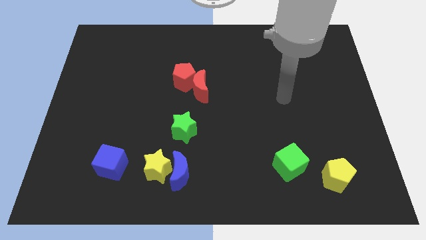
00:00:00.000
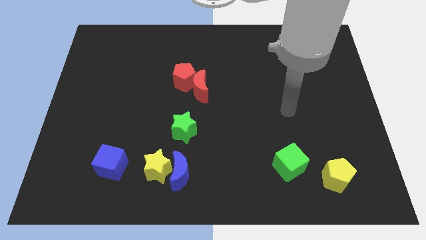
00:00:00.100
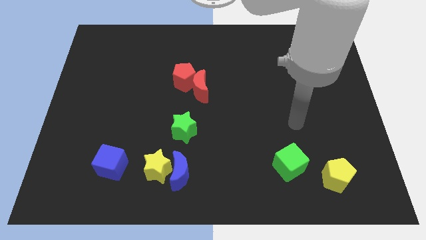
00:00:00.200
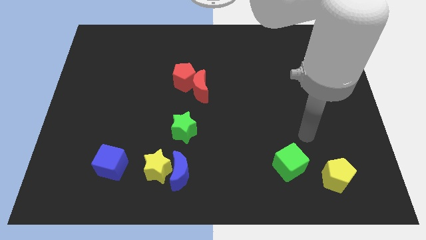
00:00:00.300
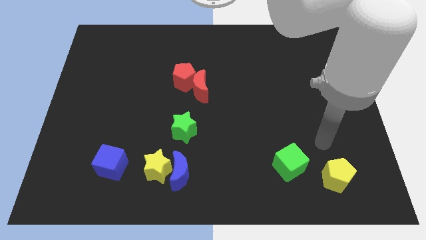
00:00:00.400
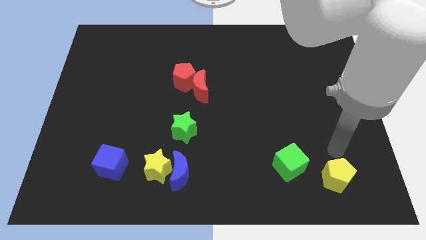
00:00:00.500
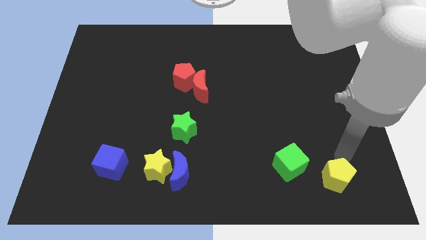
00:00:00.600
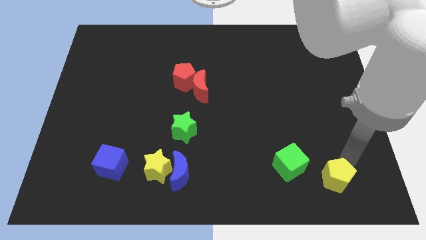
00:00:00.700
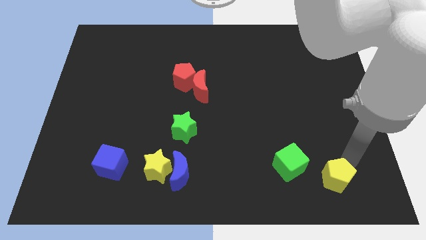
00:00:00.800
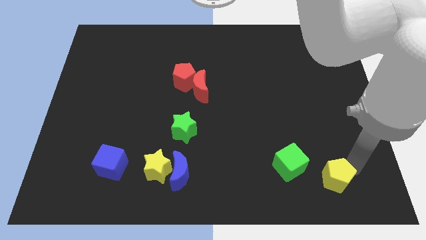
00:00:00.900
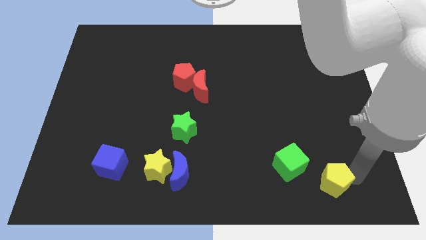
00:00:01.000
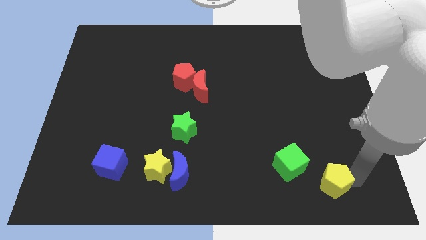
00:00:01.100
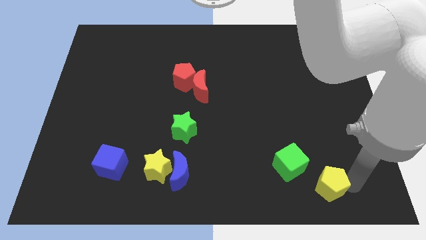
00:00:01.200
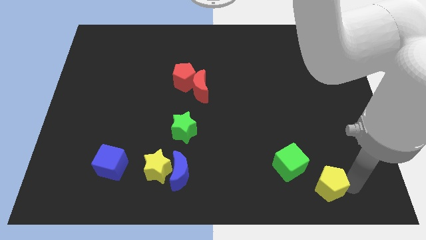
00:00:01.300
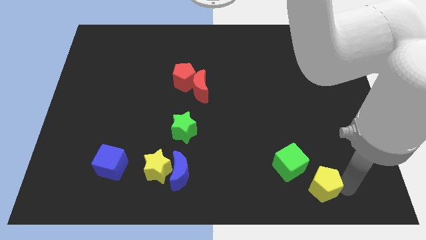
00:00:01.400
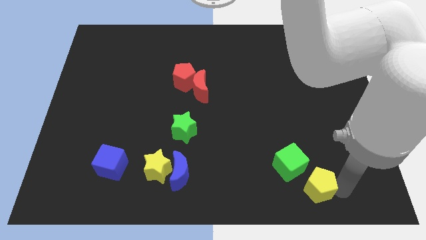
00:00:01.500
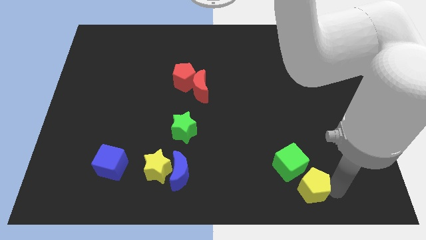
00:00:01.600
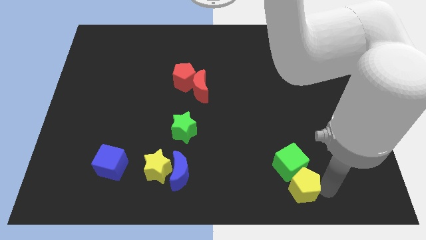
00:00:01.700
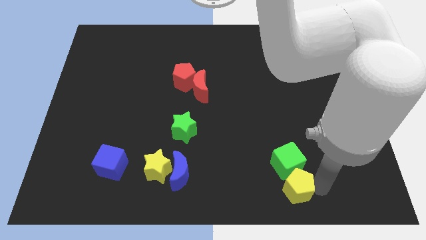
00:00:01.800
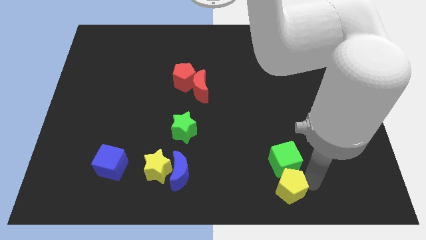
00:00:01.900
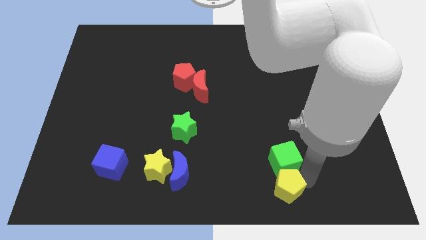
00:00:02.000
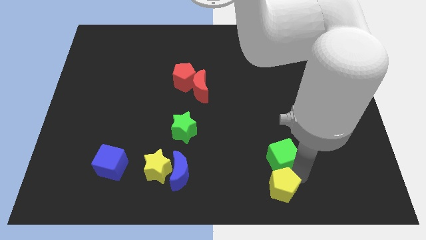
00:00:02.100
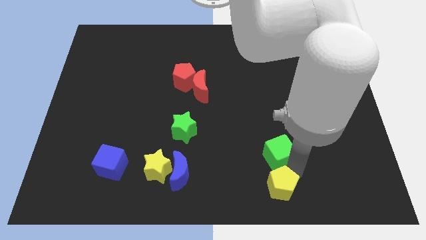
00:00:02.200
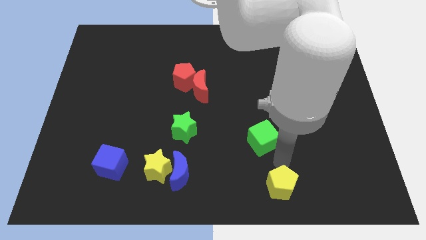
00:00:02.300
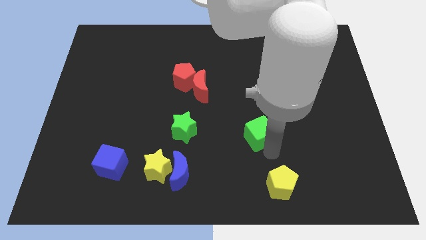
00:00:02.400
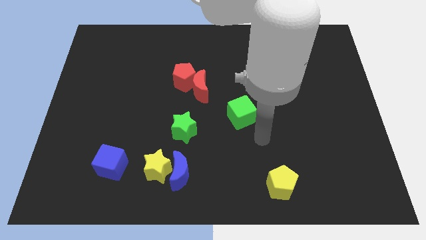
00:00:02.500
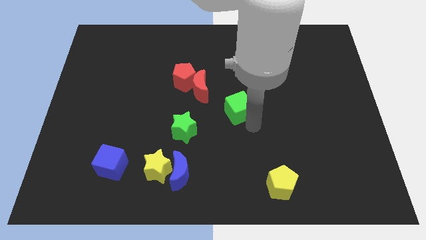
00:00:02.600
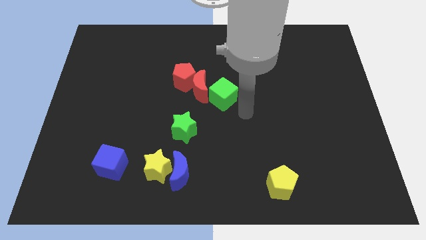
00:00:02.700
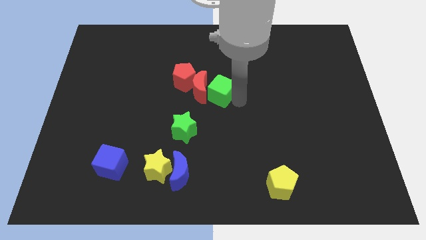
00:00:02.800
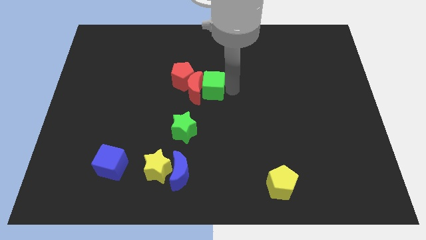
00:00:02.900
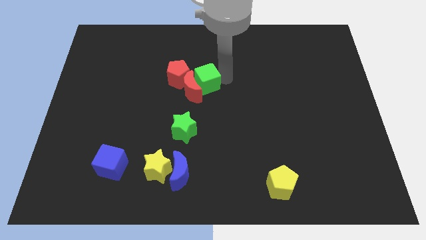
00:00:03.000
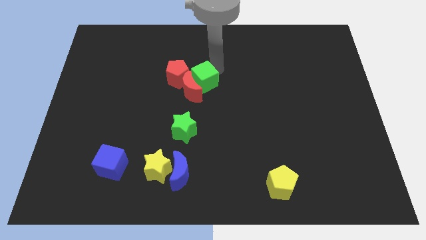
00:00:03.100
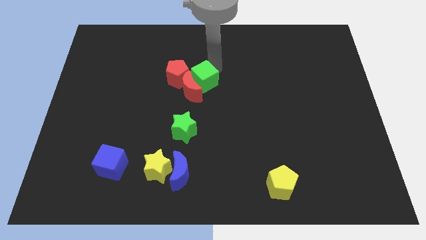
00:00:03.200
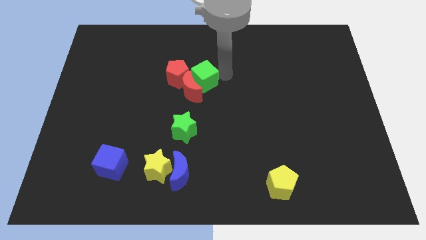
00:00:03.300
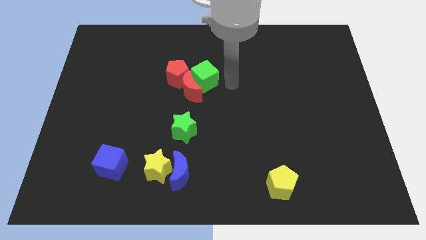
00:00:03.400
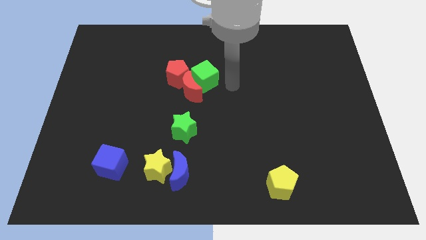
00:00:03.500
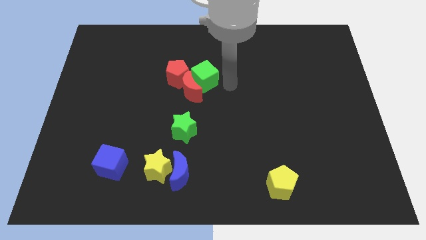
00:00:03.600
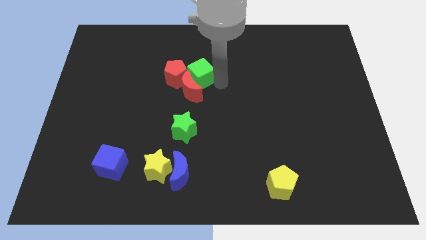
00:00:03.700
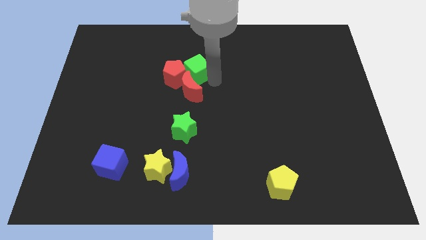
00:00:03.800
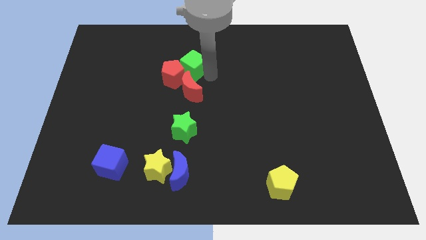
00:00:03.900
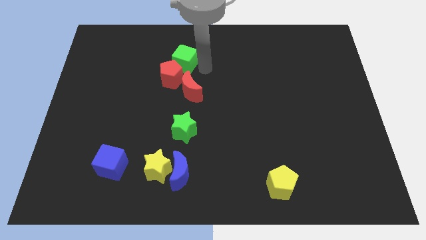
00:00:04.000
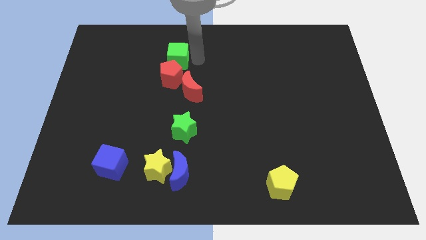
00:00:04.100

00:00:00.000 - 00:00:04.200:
move the green cube towards red crescent and red pentagon

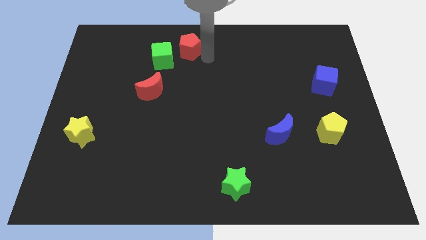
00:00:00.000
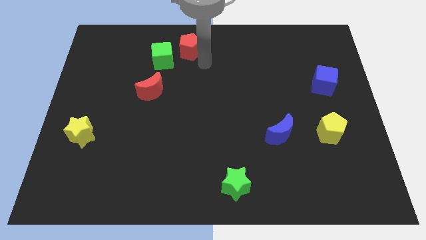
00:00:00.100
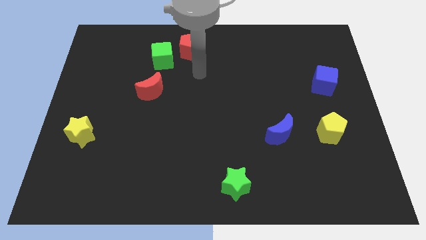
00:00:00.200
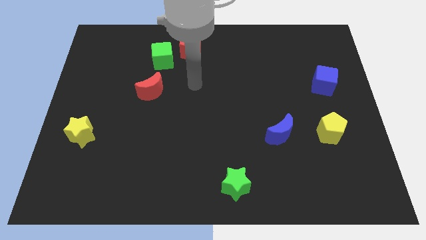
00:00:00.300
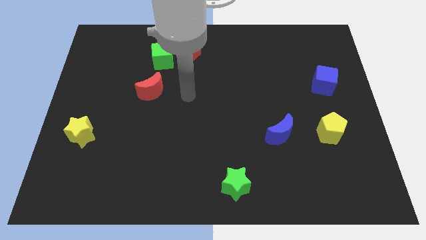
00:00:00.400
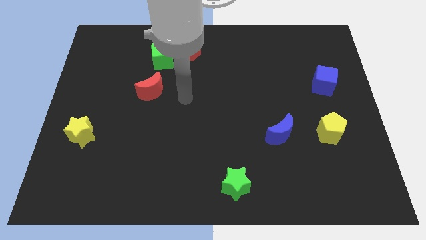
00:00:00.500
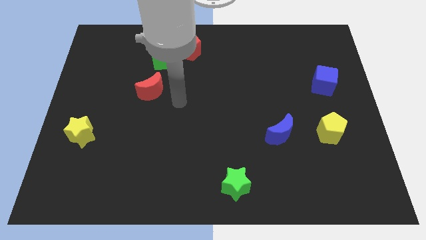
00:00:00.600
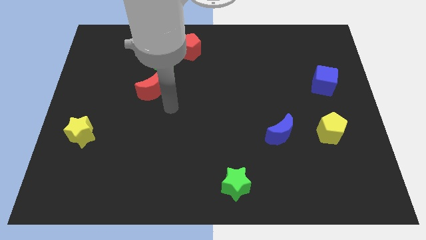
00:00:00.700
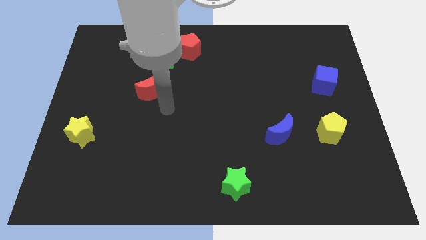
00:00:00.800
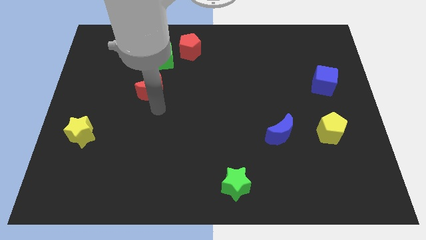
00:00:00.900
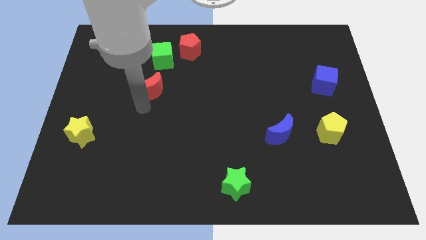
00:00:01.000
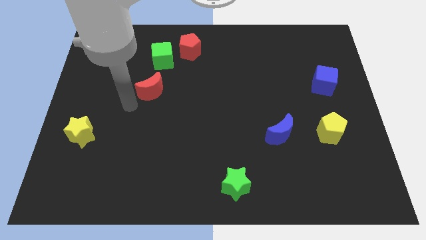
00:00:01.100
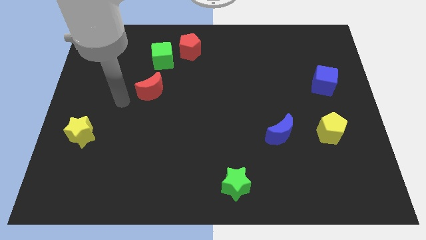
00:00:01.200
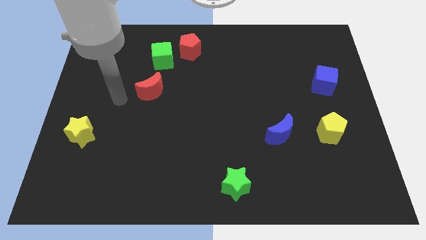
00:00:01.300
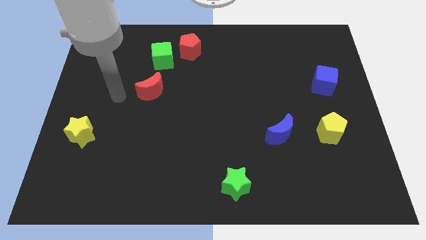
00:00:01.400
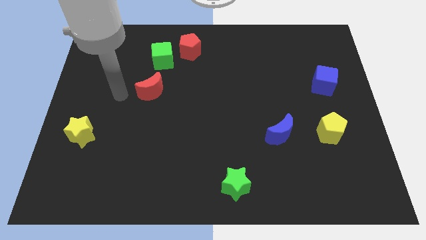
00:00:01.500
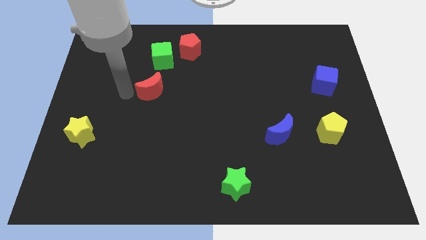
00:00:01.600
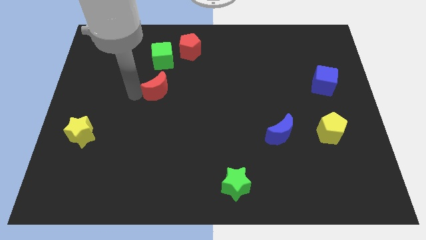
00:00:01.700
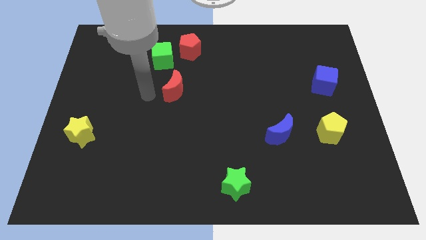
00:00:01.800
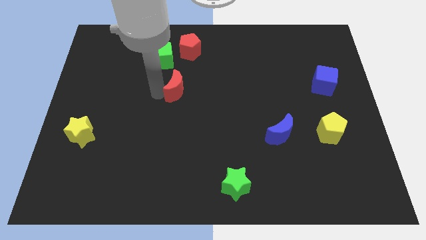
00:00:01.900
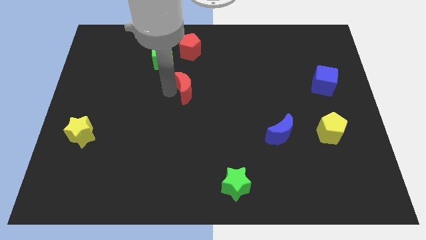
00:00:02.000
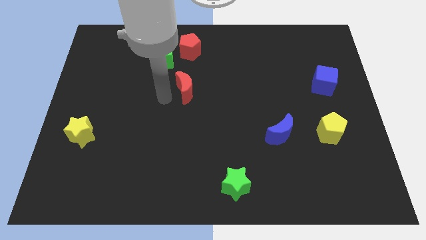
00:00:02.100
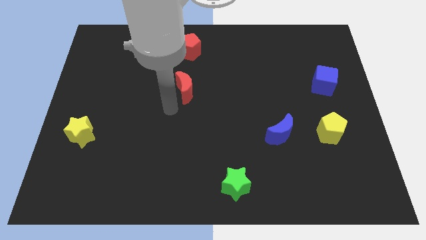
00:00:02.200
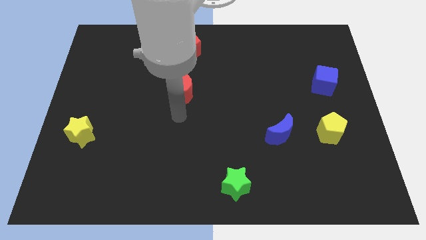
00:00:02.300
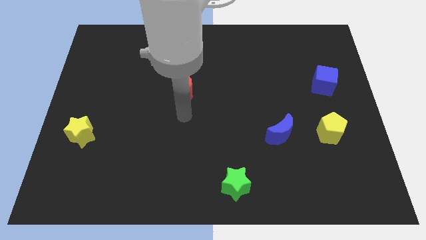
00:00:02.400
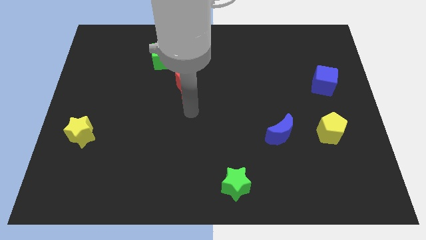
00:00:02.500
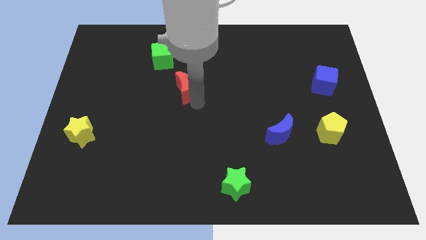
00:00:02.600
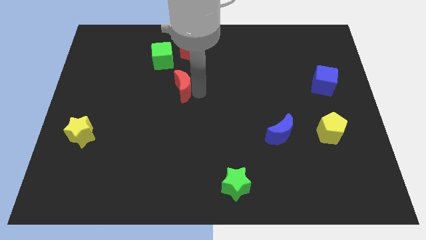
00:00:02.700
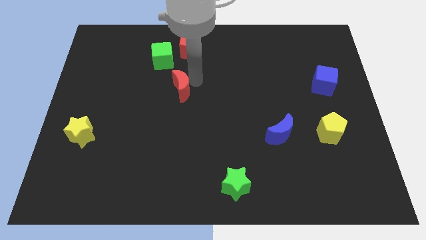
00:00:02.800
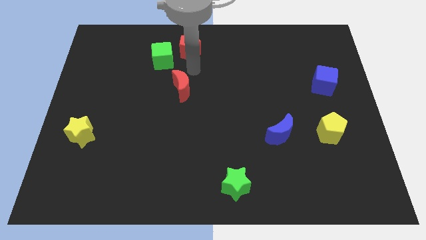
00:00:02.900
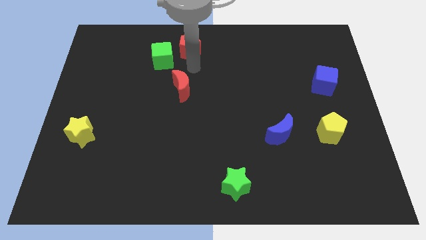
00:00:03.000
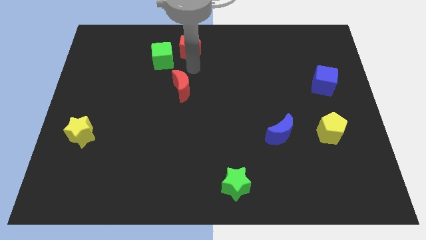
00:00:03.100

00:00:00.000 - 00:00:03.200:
move the red moon below the red pentagon

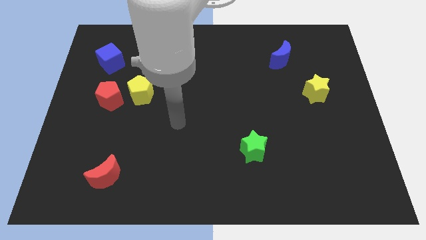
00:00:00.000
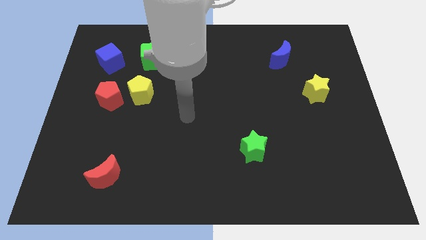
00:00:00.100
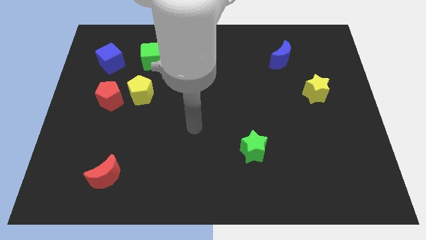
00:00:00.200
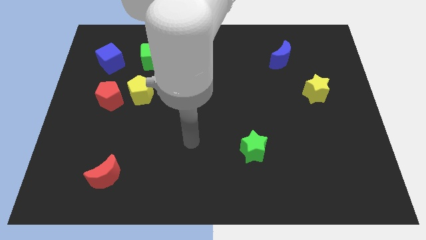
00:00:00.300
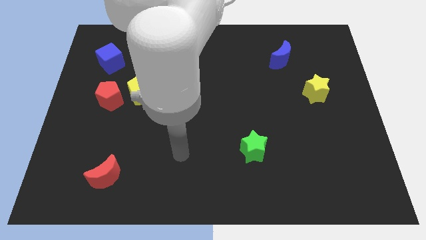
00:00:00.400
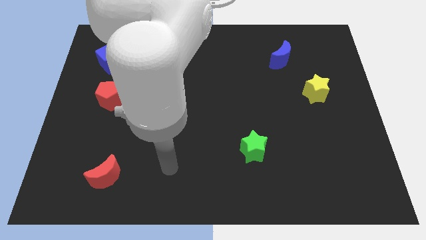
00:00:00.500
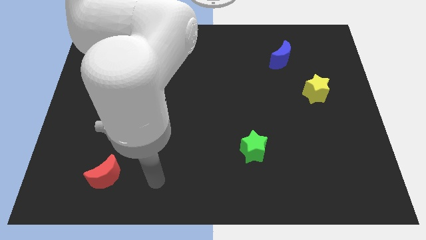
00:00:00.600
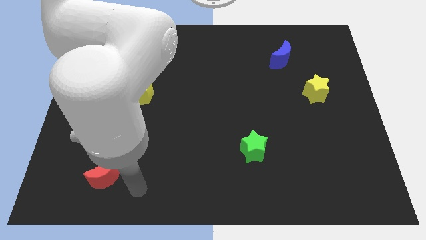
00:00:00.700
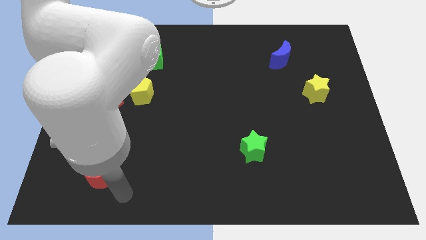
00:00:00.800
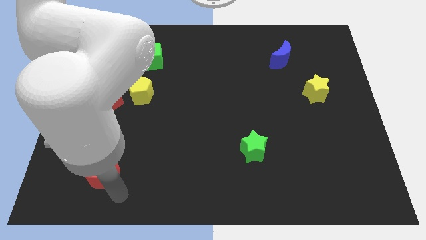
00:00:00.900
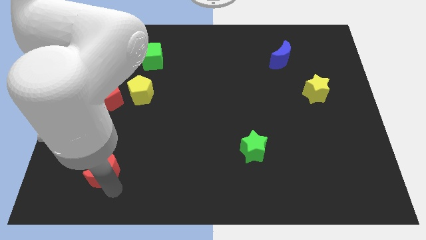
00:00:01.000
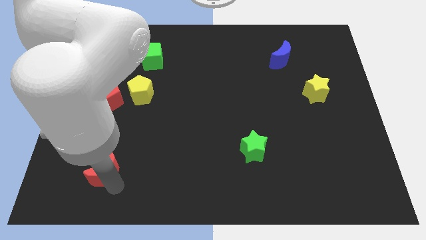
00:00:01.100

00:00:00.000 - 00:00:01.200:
place your hand below the red crescent

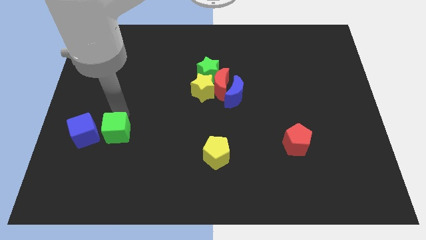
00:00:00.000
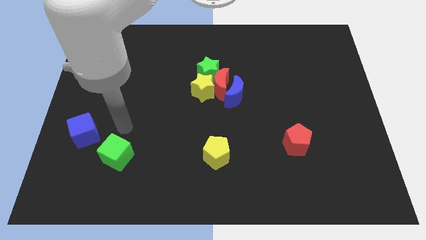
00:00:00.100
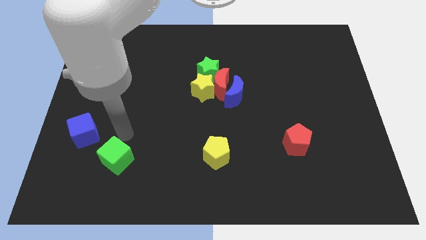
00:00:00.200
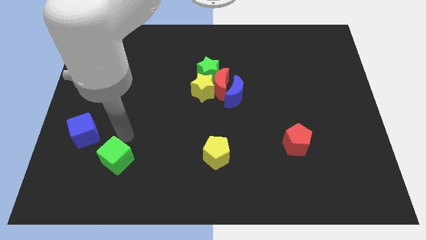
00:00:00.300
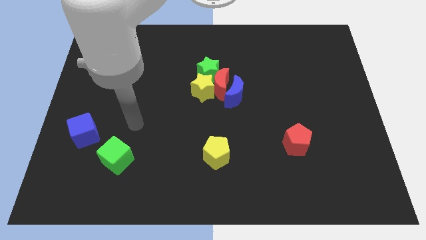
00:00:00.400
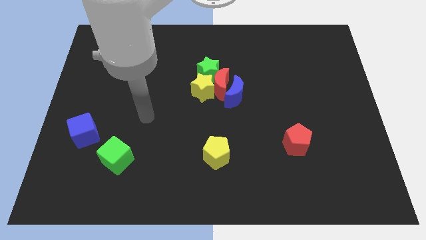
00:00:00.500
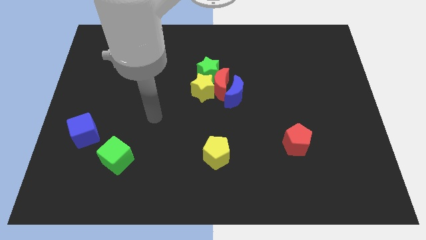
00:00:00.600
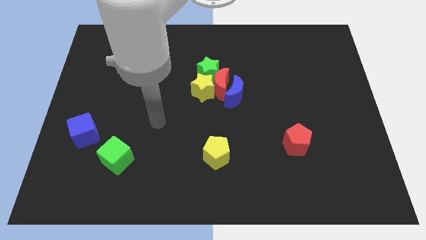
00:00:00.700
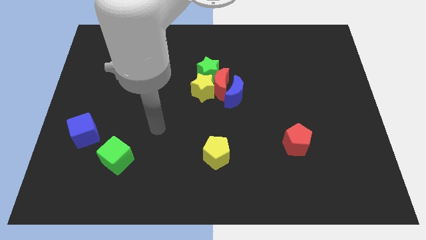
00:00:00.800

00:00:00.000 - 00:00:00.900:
push green cube slightly downwards
